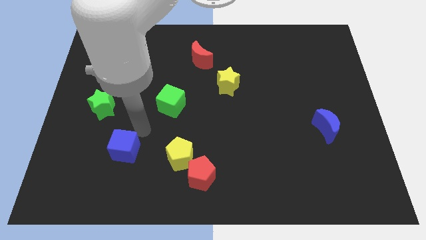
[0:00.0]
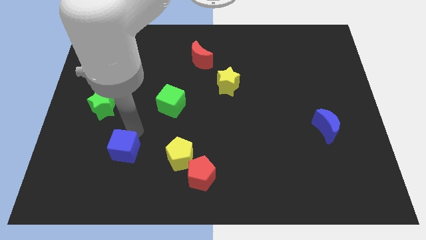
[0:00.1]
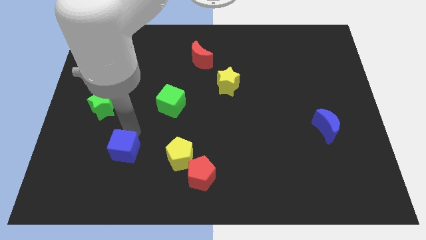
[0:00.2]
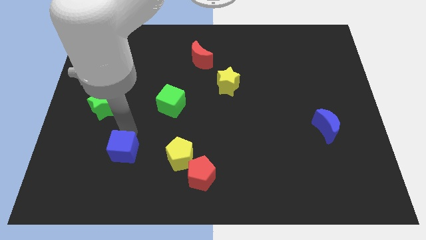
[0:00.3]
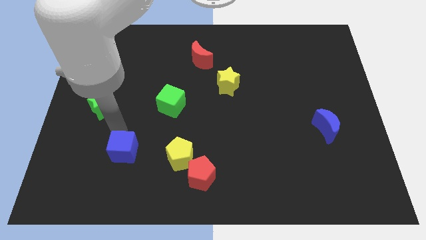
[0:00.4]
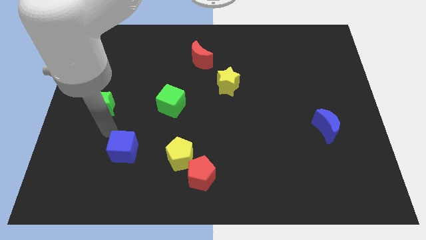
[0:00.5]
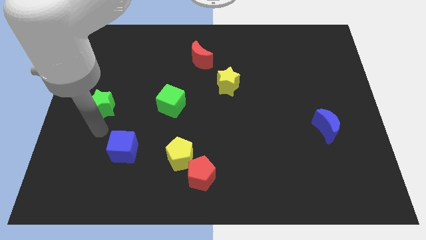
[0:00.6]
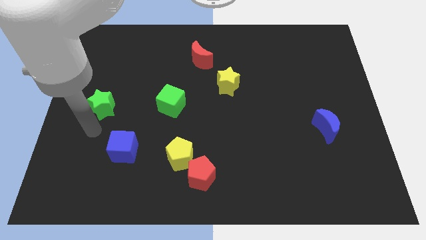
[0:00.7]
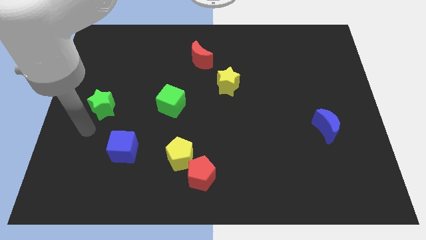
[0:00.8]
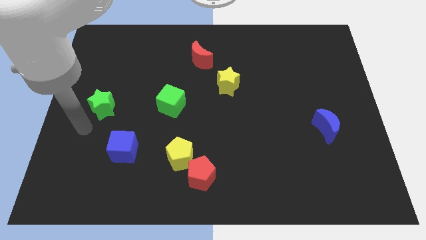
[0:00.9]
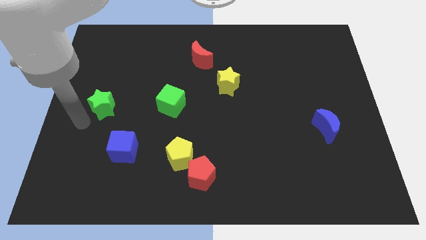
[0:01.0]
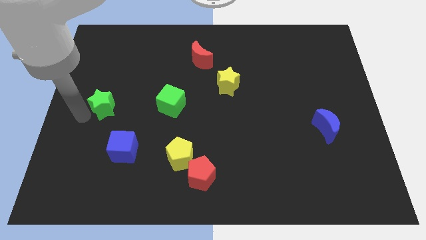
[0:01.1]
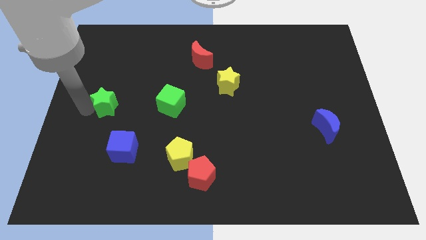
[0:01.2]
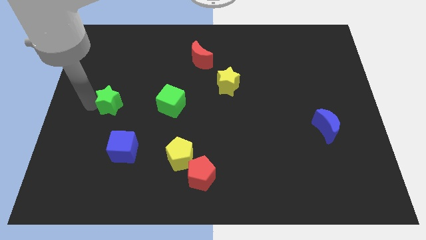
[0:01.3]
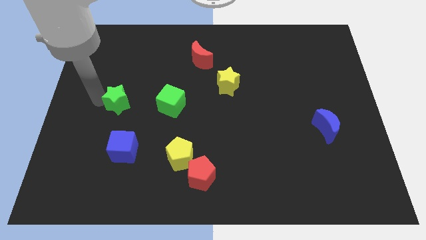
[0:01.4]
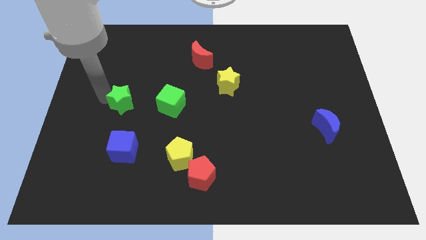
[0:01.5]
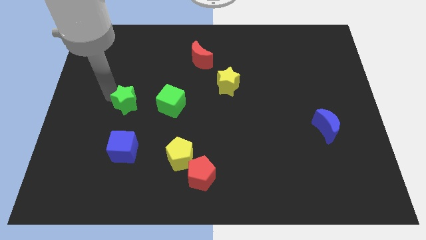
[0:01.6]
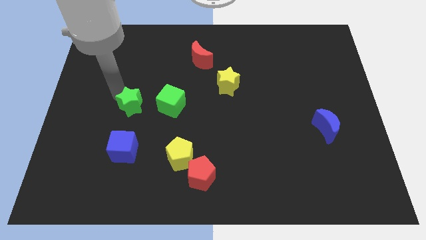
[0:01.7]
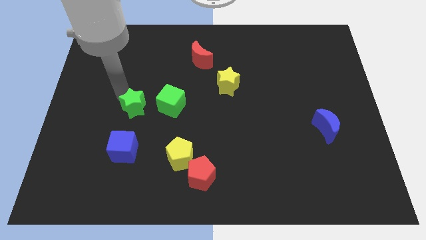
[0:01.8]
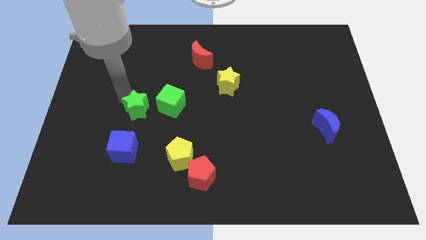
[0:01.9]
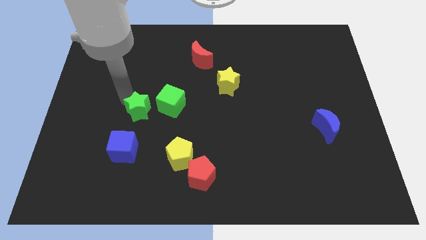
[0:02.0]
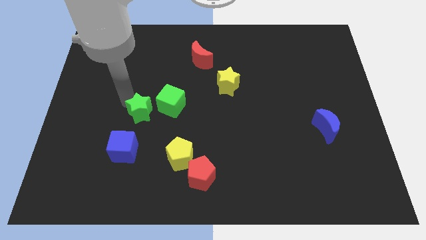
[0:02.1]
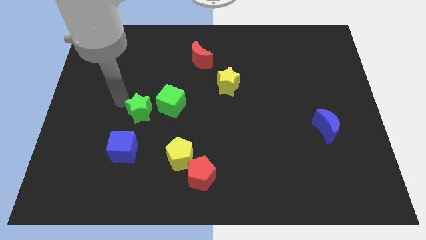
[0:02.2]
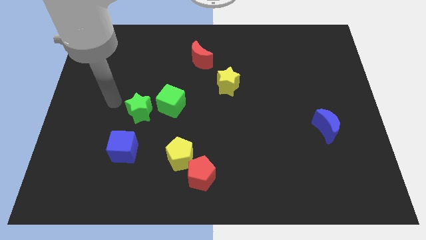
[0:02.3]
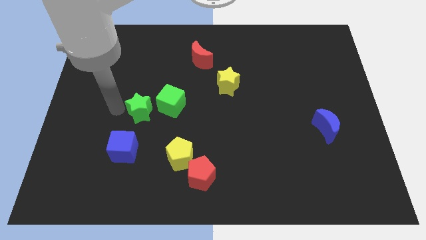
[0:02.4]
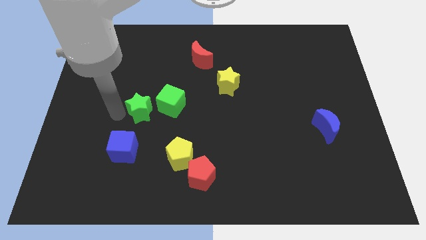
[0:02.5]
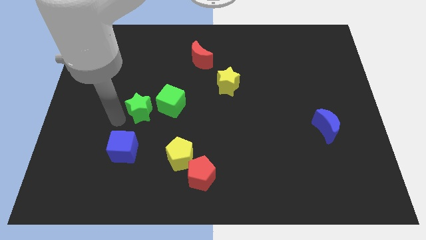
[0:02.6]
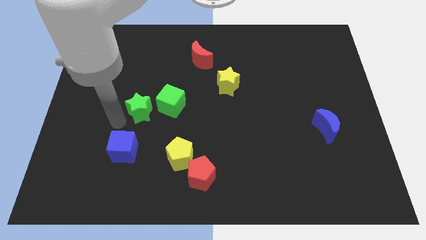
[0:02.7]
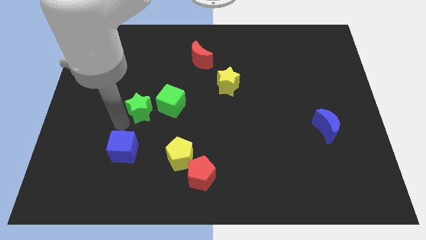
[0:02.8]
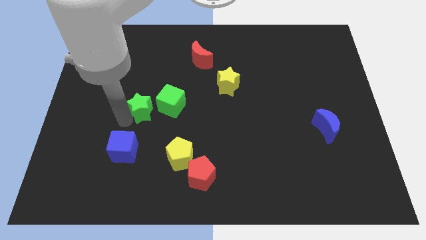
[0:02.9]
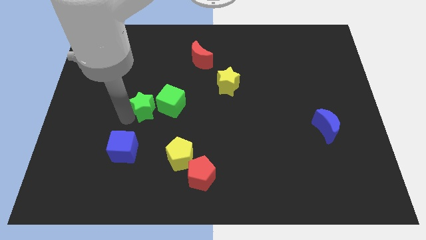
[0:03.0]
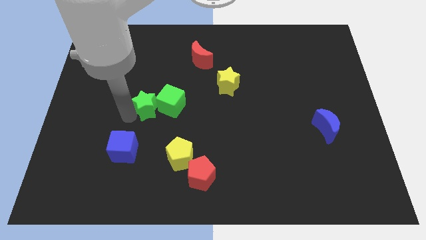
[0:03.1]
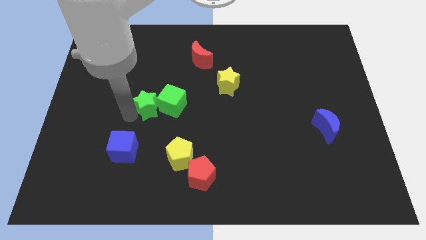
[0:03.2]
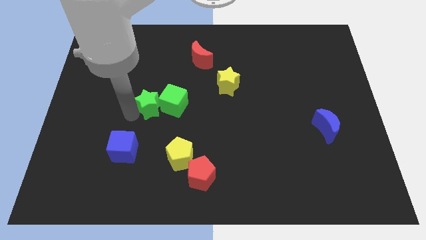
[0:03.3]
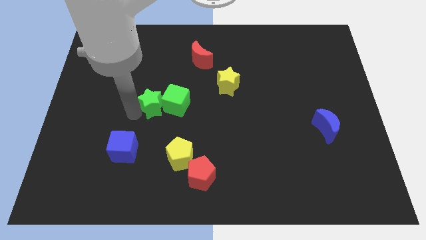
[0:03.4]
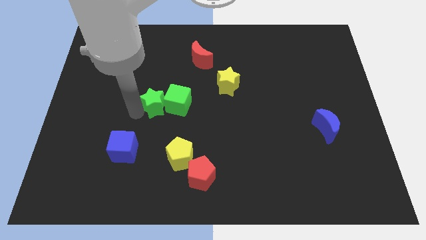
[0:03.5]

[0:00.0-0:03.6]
push the green star into the green cube

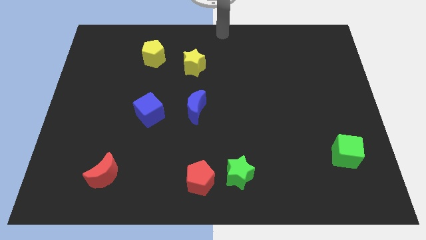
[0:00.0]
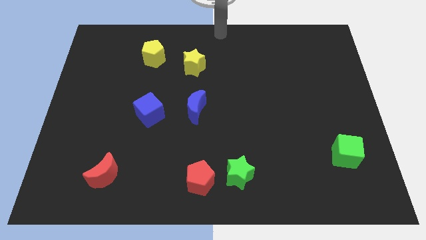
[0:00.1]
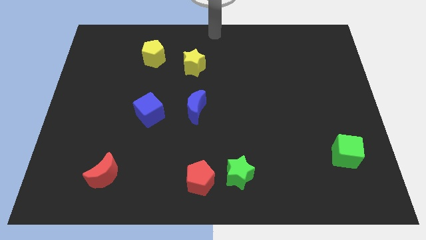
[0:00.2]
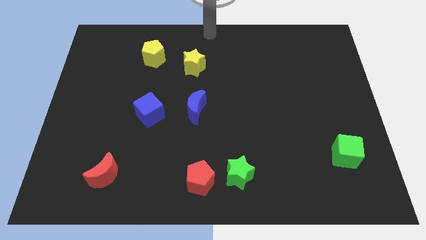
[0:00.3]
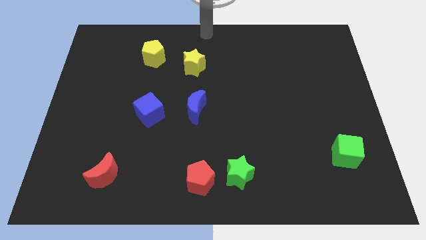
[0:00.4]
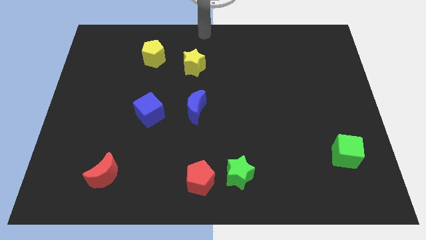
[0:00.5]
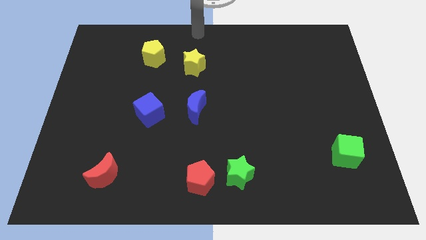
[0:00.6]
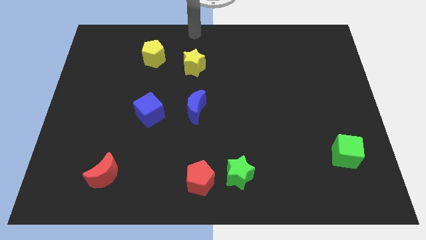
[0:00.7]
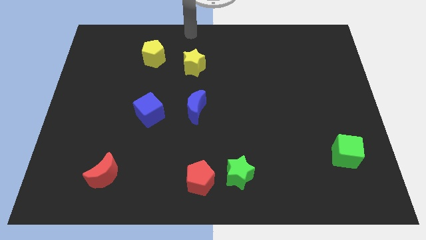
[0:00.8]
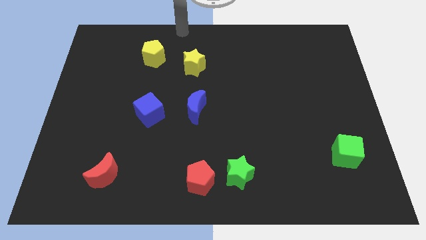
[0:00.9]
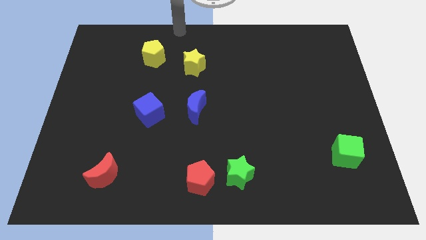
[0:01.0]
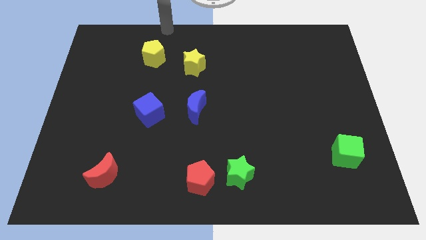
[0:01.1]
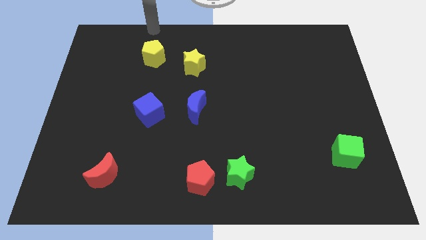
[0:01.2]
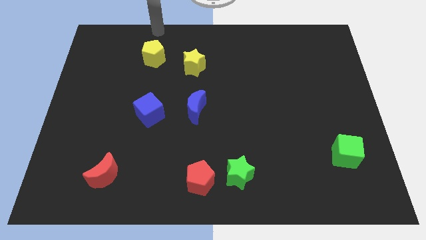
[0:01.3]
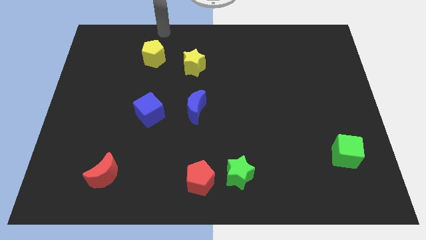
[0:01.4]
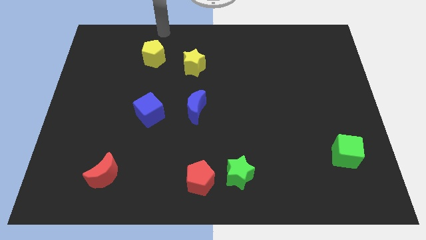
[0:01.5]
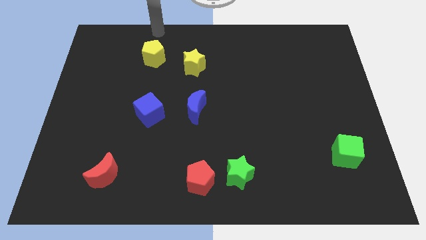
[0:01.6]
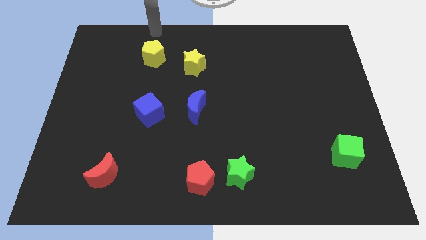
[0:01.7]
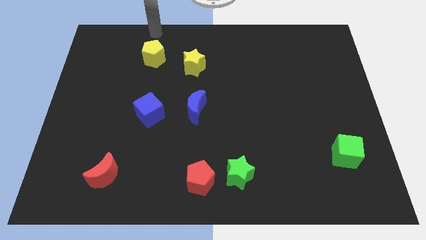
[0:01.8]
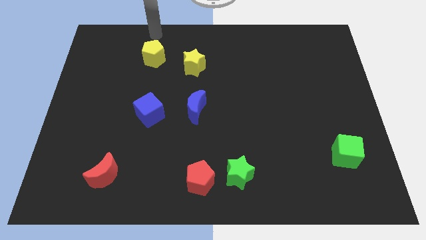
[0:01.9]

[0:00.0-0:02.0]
go to the top side of the yellow pentagon

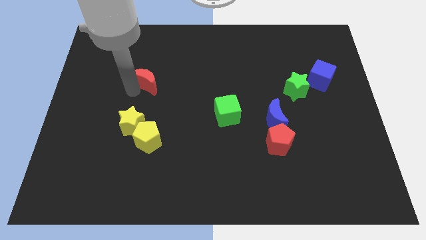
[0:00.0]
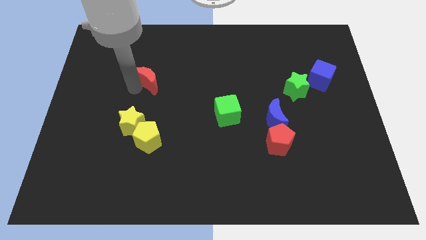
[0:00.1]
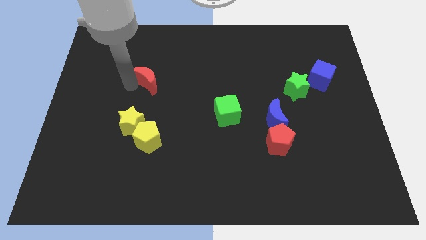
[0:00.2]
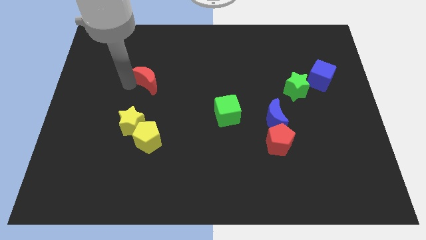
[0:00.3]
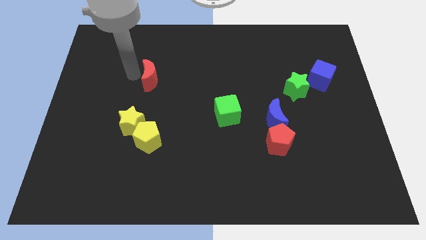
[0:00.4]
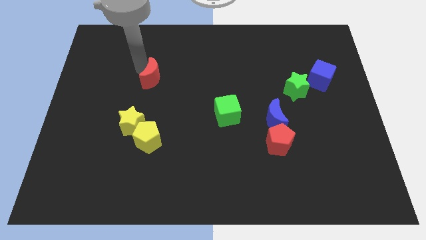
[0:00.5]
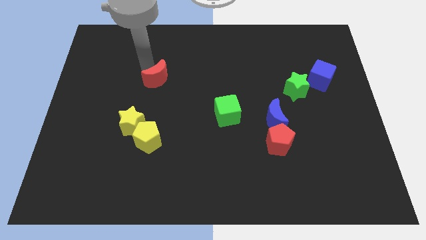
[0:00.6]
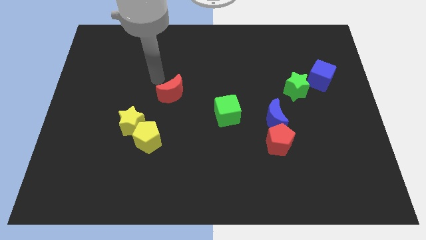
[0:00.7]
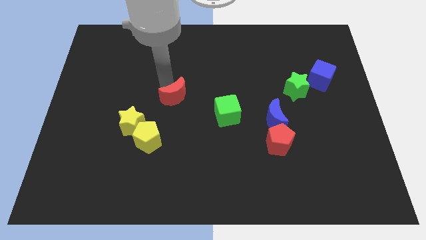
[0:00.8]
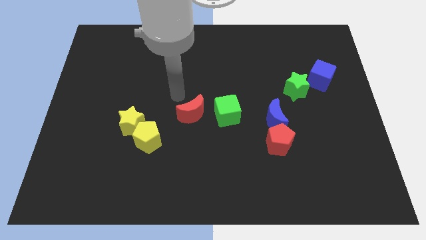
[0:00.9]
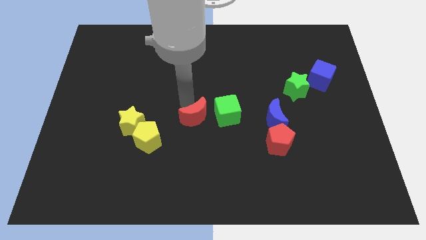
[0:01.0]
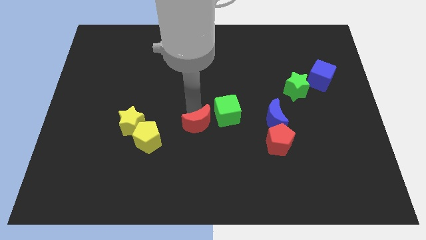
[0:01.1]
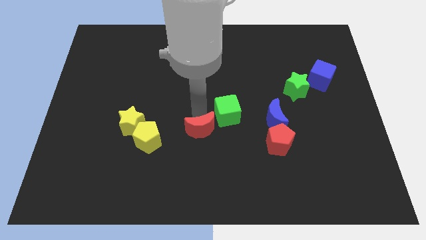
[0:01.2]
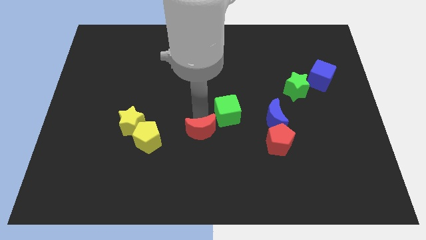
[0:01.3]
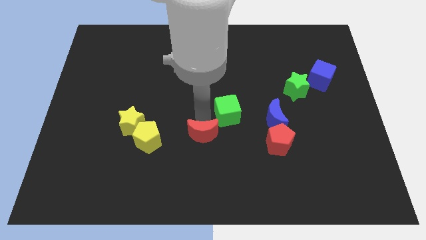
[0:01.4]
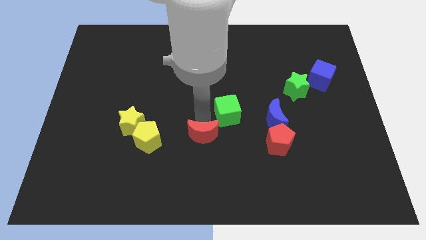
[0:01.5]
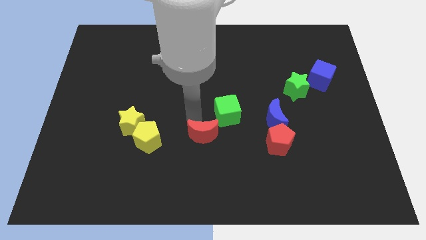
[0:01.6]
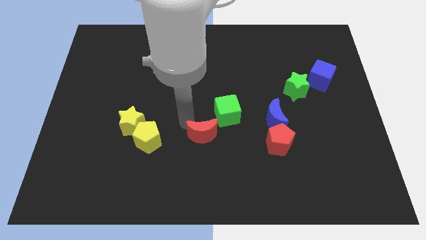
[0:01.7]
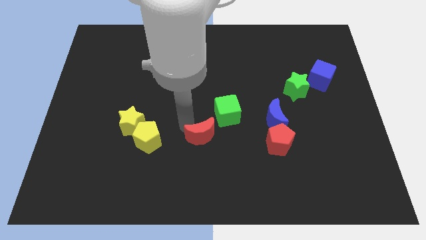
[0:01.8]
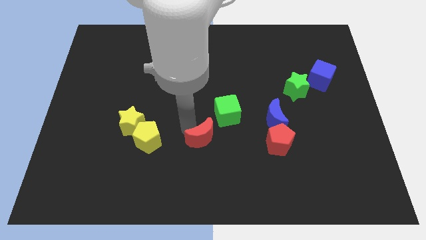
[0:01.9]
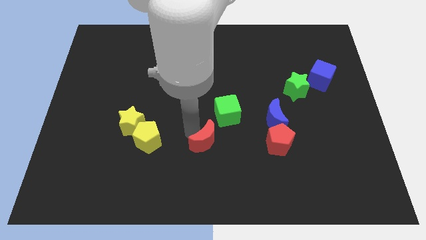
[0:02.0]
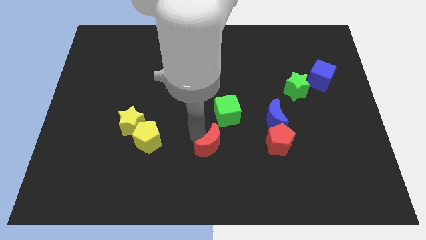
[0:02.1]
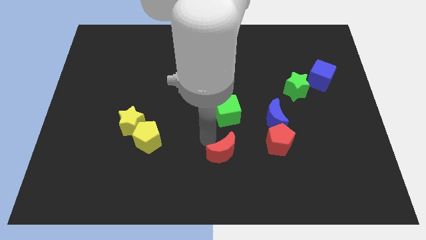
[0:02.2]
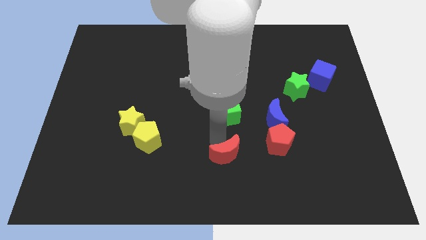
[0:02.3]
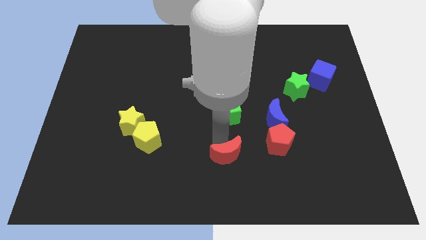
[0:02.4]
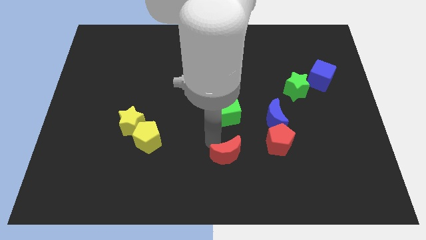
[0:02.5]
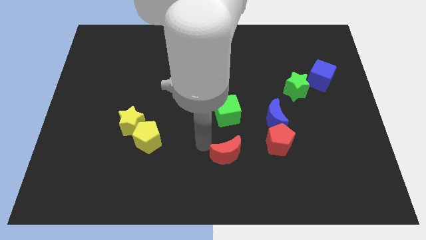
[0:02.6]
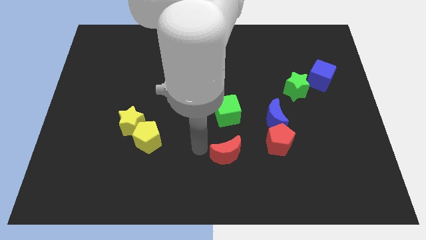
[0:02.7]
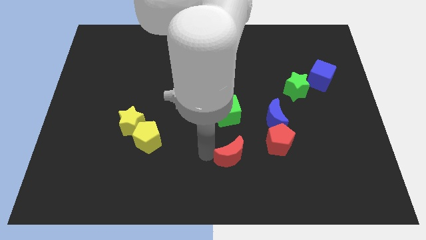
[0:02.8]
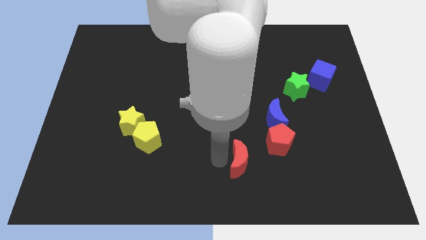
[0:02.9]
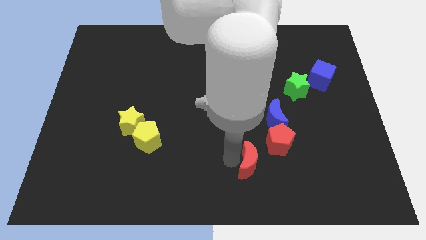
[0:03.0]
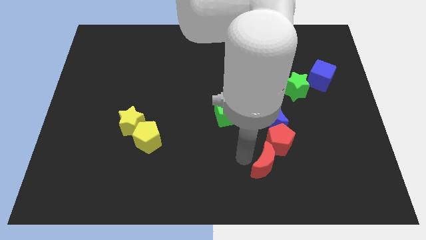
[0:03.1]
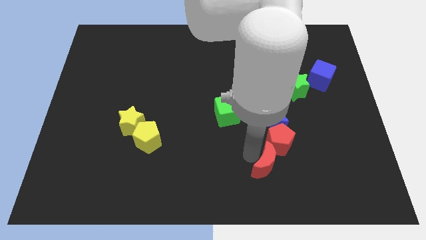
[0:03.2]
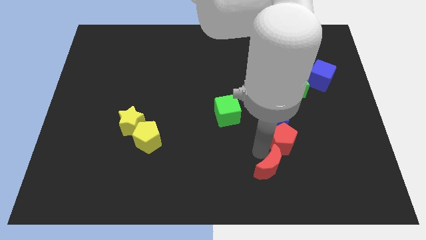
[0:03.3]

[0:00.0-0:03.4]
drag the red moon into the bottom left side of the red pentagon
